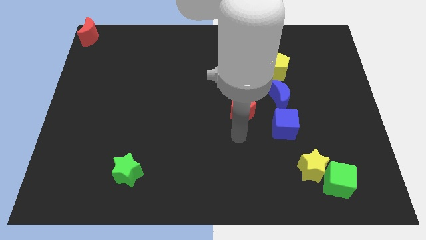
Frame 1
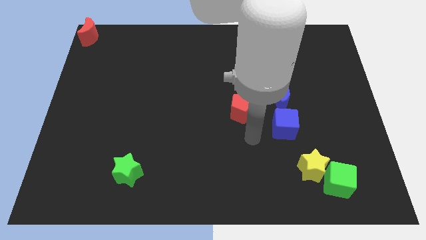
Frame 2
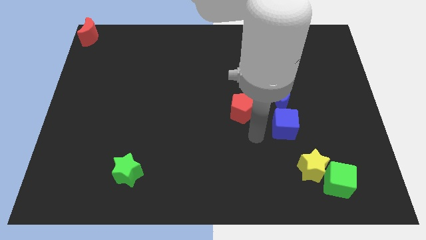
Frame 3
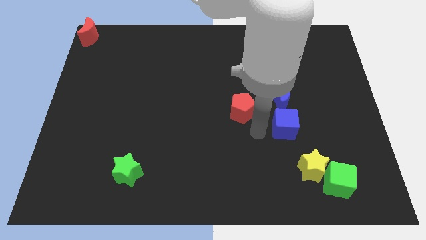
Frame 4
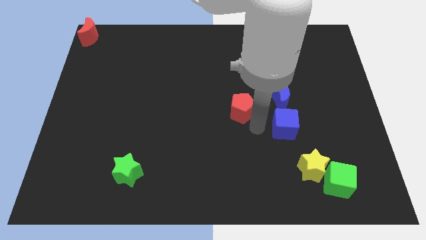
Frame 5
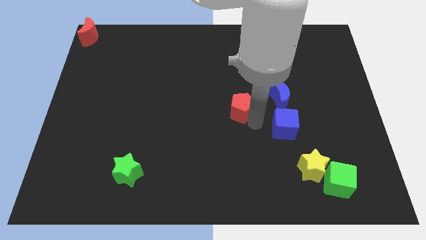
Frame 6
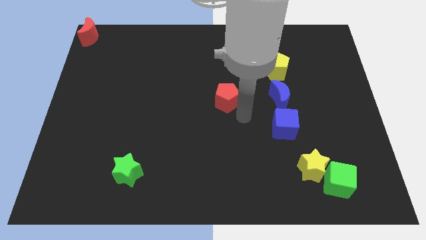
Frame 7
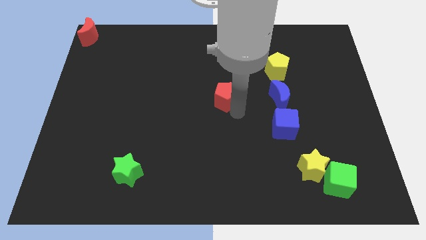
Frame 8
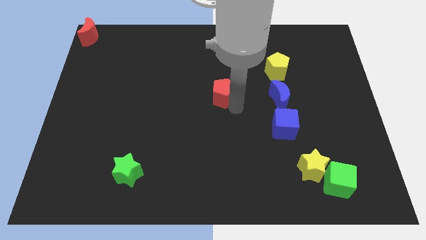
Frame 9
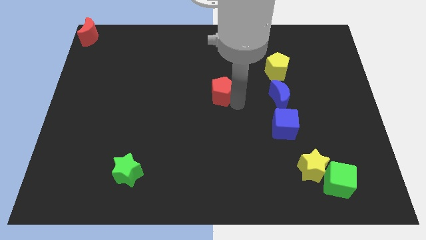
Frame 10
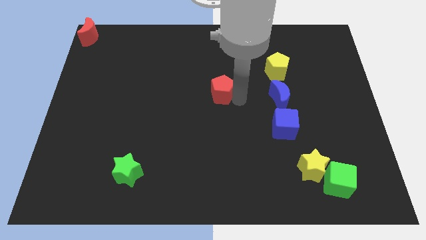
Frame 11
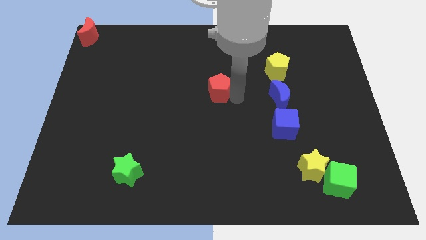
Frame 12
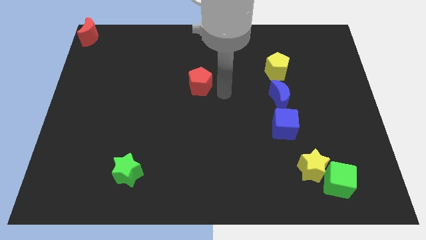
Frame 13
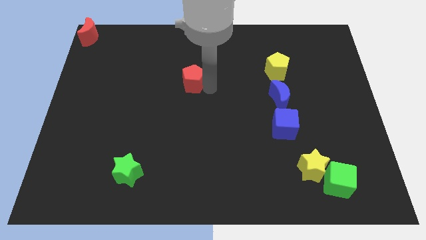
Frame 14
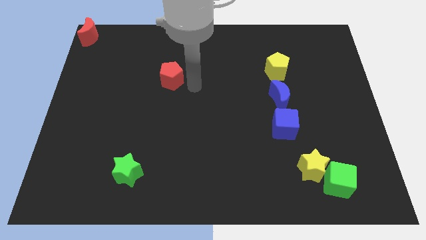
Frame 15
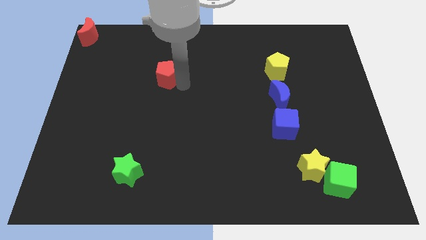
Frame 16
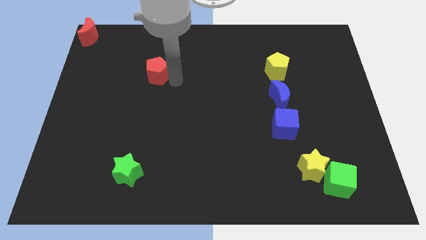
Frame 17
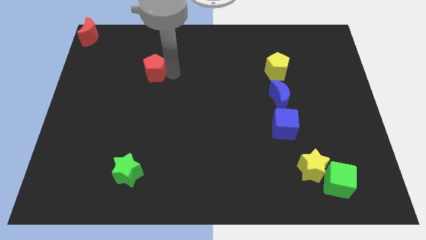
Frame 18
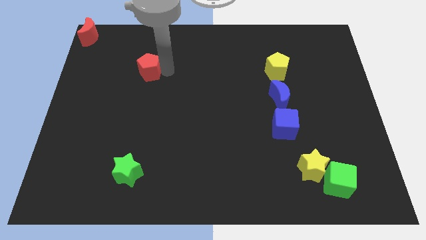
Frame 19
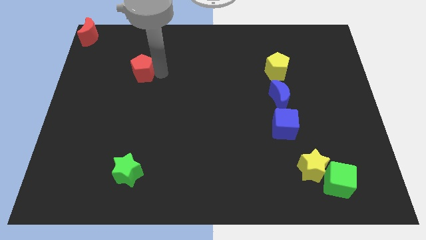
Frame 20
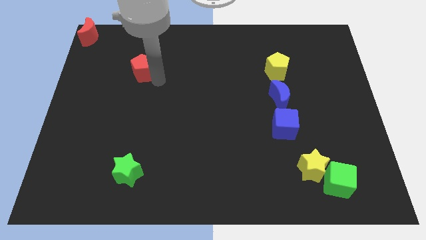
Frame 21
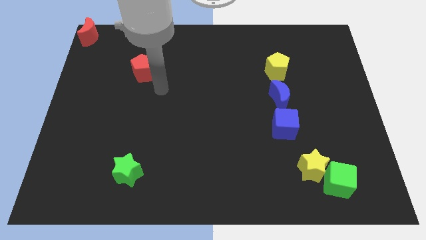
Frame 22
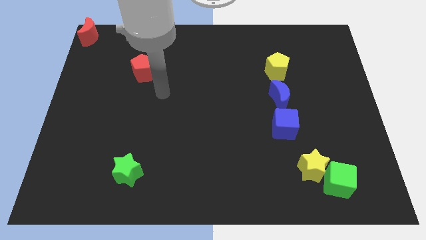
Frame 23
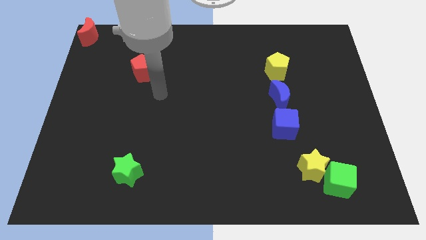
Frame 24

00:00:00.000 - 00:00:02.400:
place the red pentagon vertically above the green star

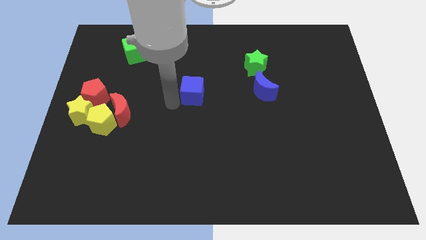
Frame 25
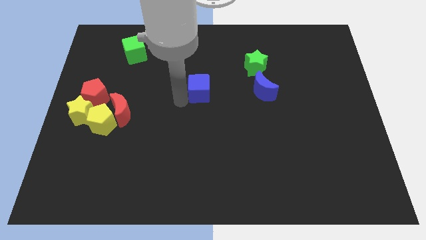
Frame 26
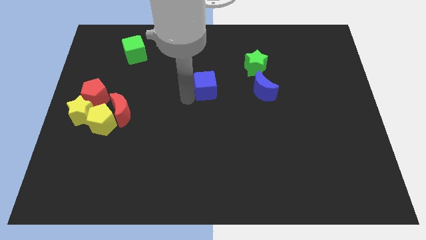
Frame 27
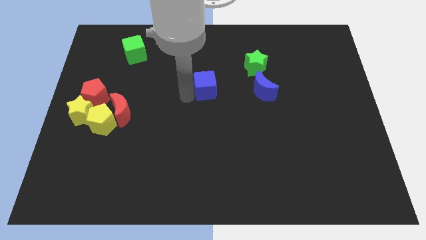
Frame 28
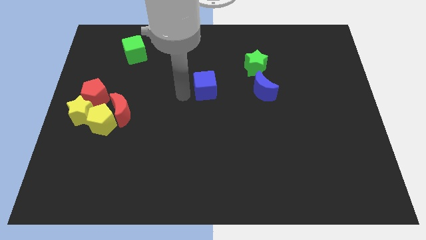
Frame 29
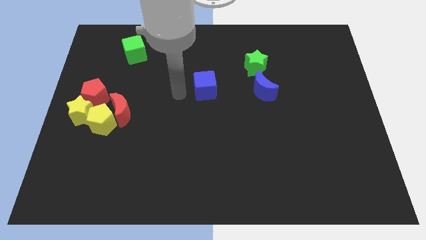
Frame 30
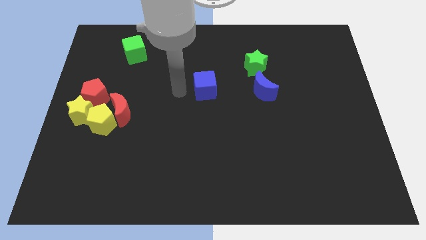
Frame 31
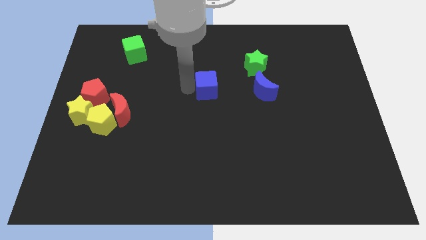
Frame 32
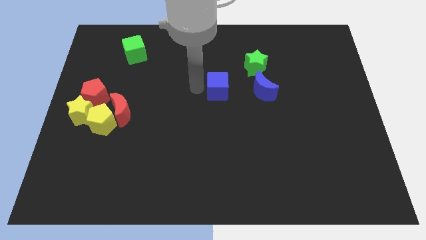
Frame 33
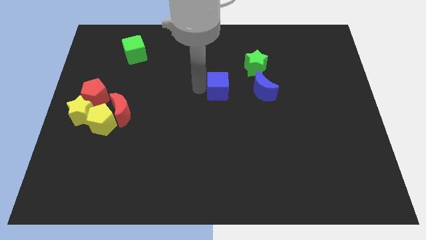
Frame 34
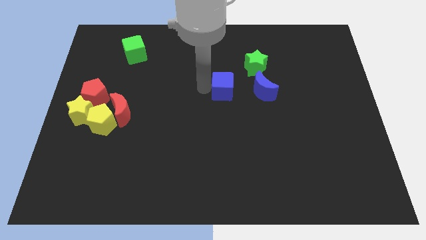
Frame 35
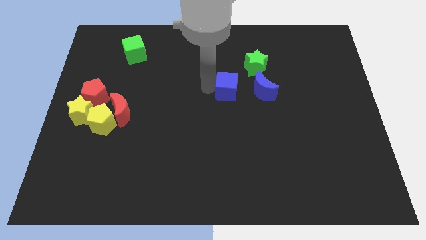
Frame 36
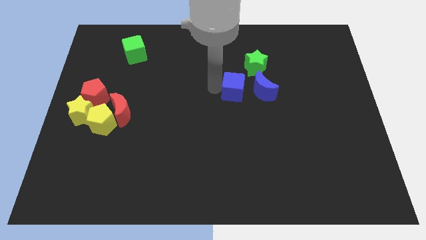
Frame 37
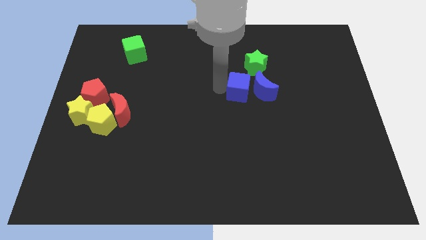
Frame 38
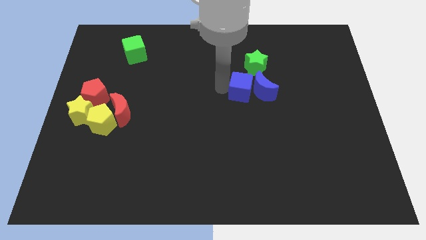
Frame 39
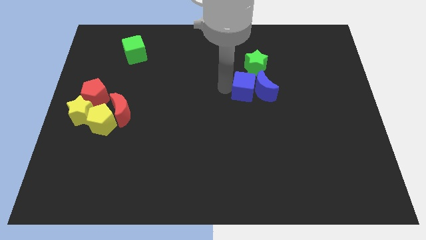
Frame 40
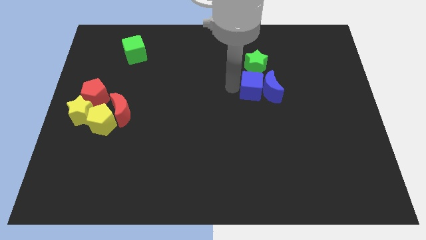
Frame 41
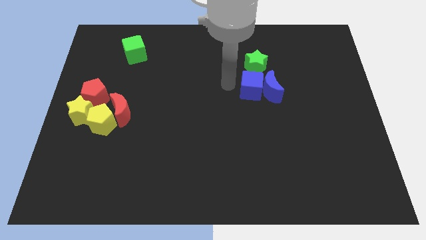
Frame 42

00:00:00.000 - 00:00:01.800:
place blue cube below green star

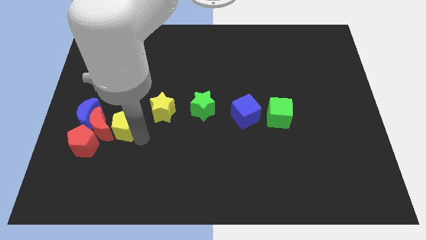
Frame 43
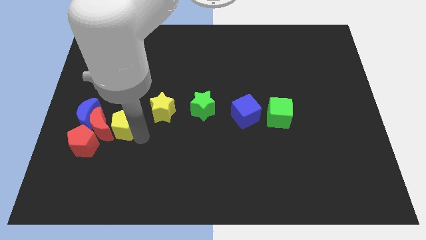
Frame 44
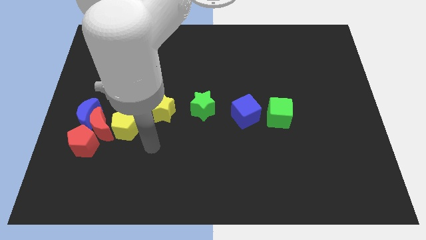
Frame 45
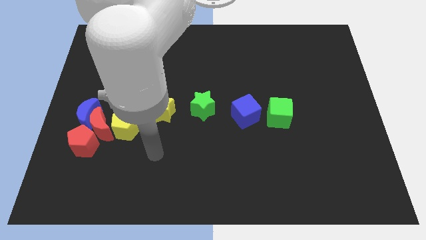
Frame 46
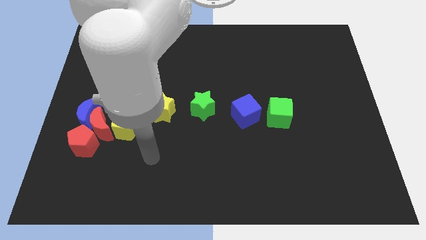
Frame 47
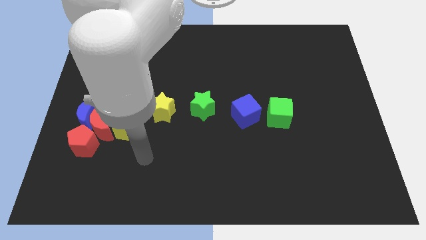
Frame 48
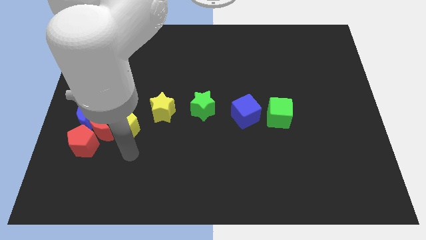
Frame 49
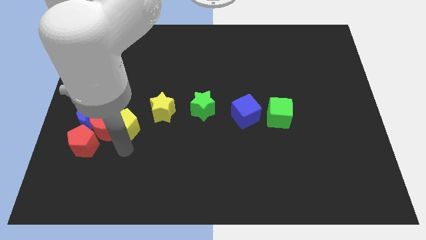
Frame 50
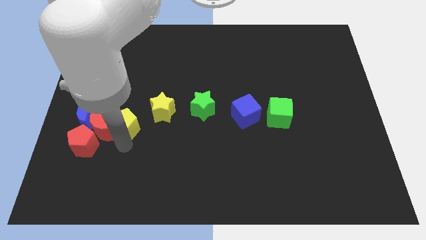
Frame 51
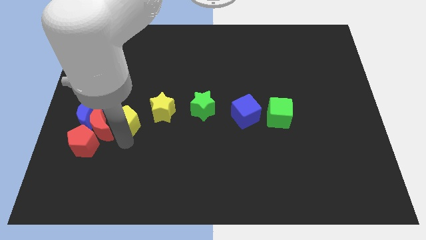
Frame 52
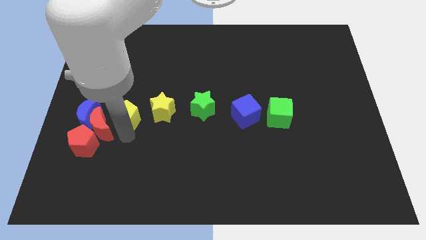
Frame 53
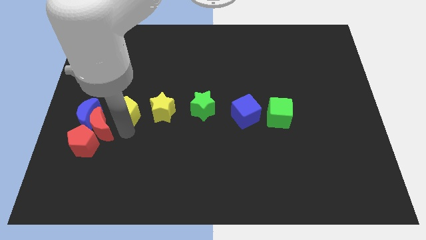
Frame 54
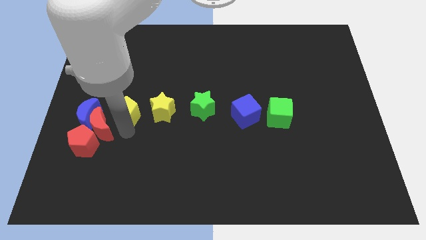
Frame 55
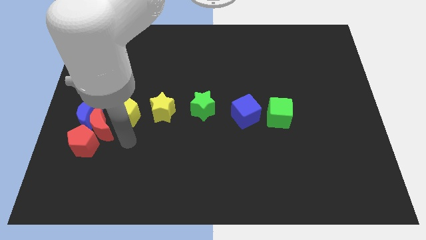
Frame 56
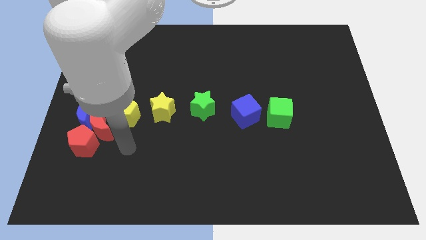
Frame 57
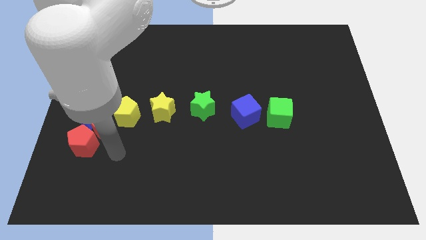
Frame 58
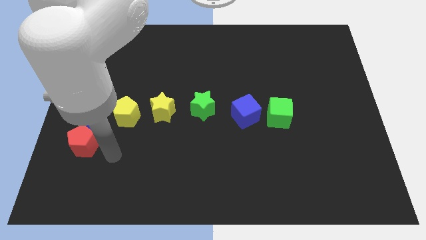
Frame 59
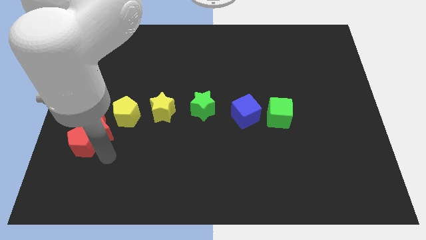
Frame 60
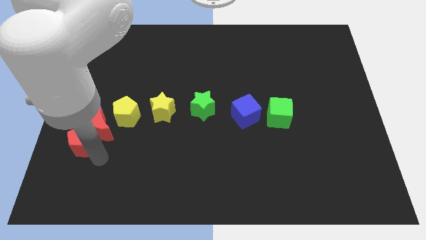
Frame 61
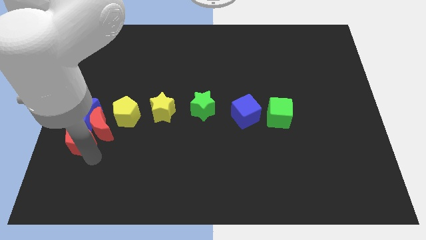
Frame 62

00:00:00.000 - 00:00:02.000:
move the yellow pentagon left beside the yellow star

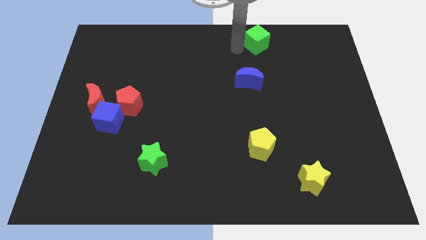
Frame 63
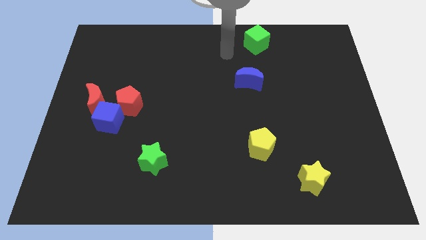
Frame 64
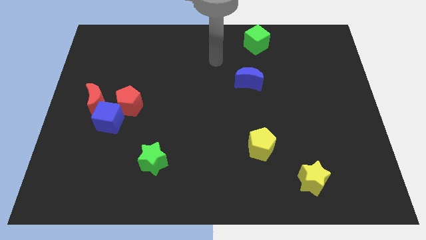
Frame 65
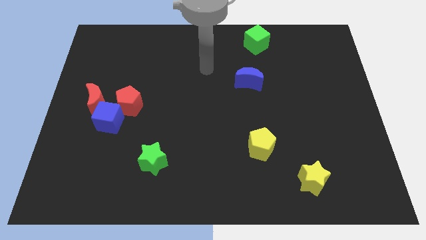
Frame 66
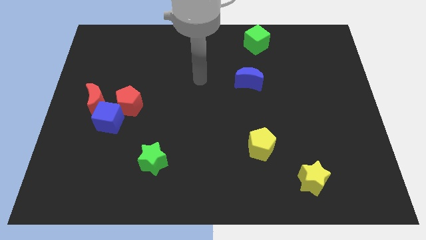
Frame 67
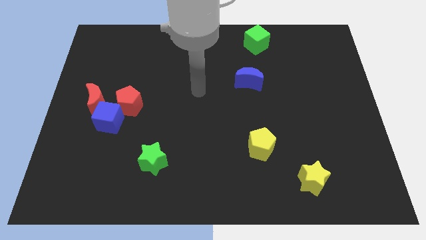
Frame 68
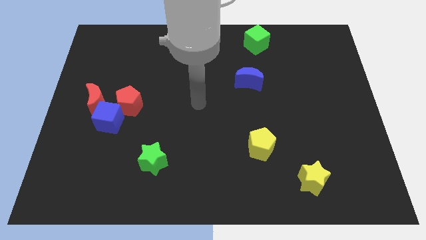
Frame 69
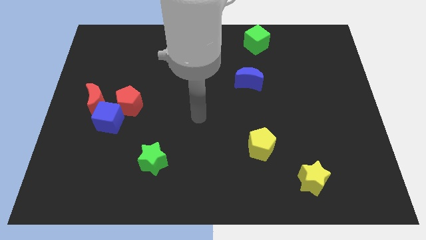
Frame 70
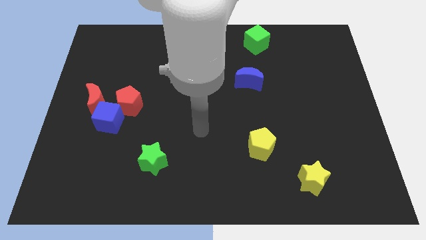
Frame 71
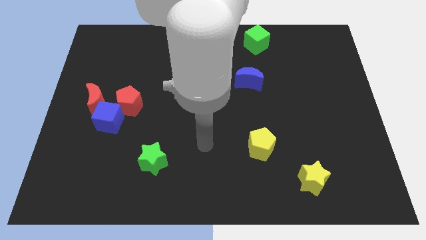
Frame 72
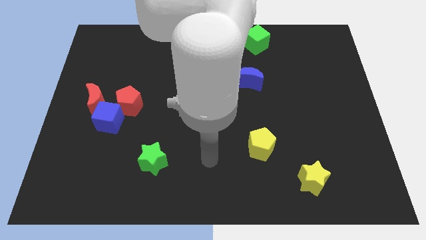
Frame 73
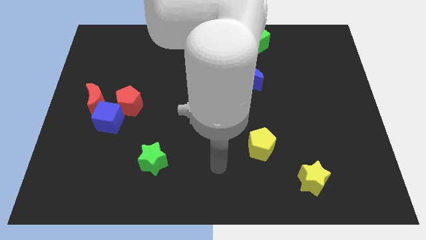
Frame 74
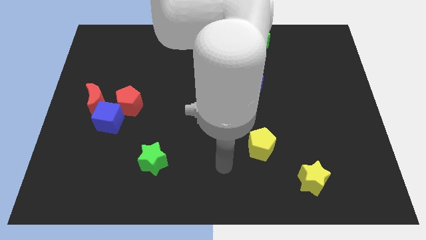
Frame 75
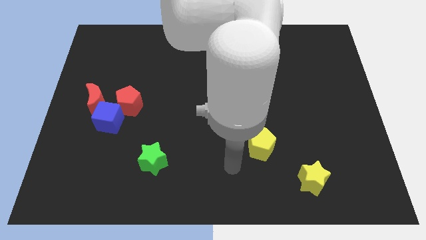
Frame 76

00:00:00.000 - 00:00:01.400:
move your arm away from green cube

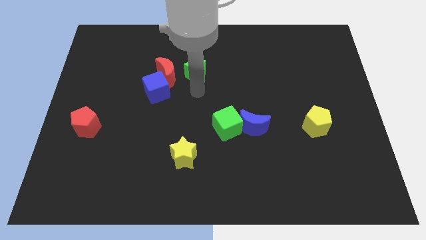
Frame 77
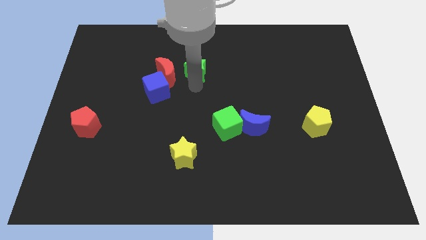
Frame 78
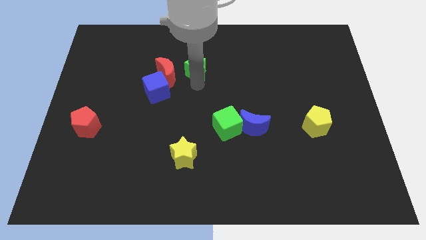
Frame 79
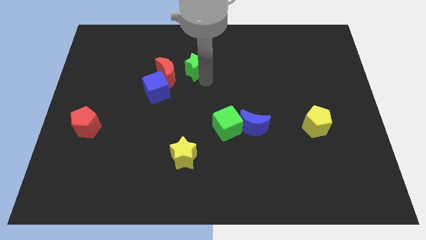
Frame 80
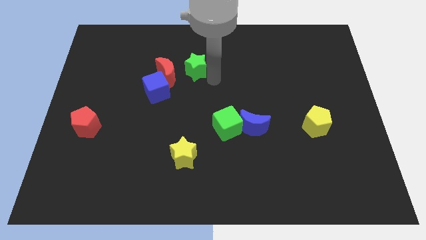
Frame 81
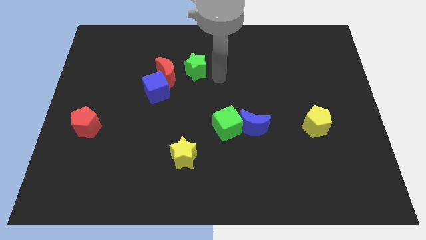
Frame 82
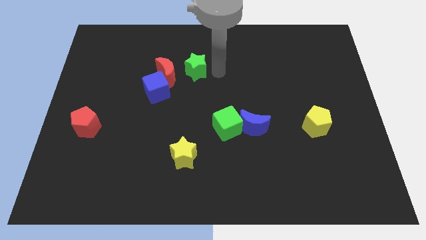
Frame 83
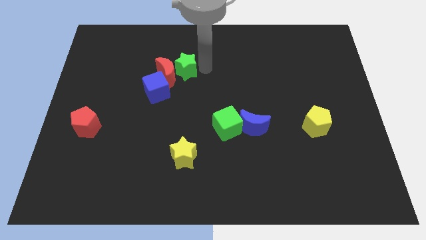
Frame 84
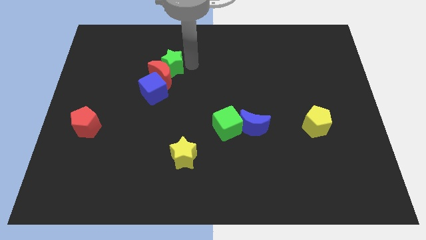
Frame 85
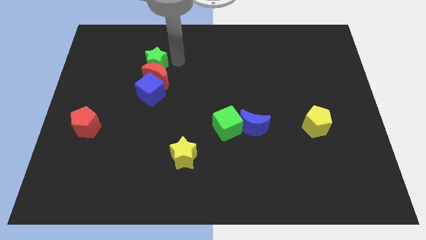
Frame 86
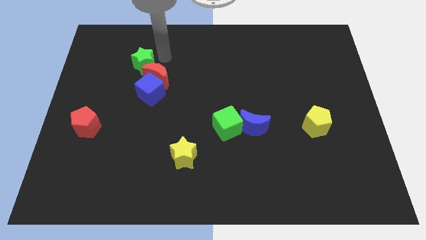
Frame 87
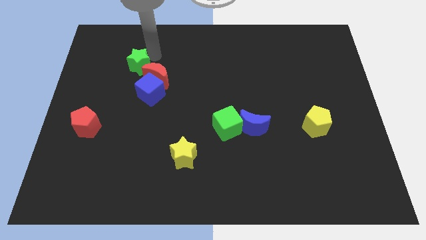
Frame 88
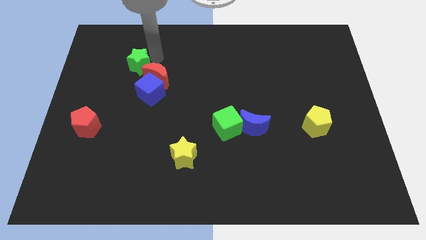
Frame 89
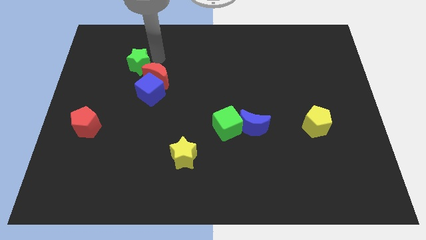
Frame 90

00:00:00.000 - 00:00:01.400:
move the green star at the top of the red moon

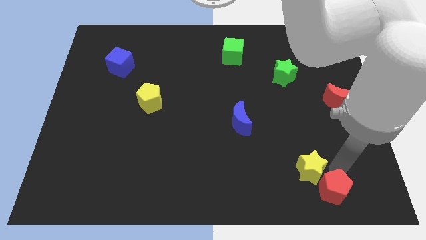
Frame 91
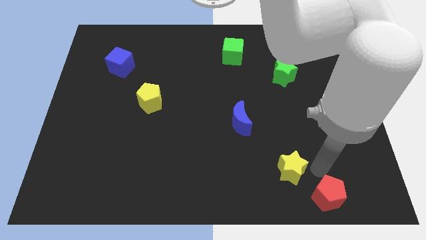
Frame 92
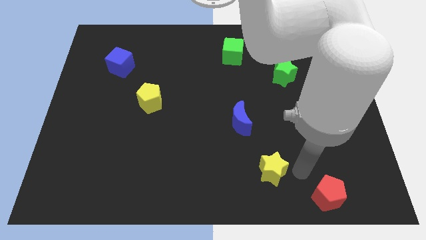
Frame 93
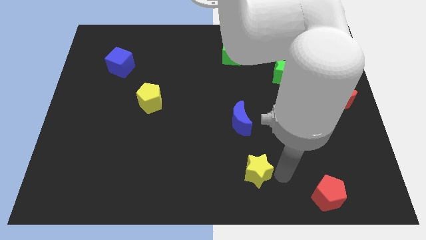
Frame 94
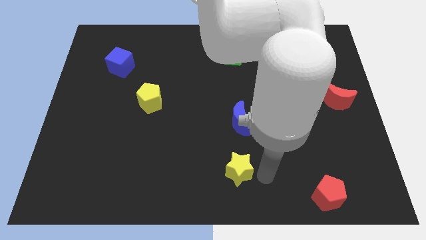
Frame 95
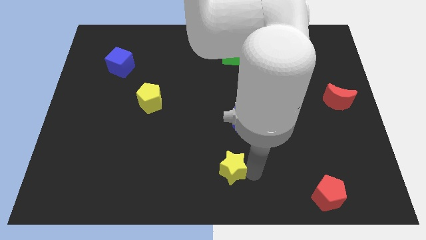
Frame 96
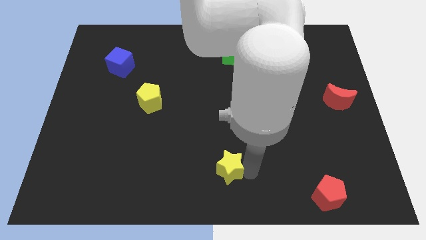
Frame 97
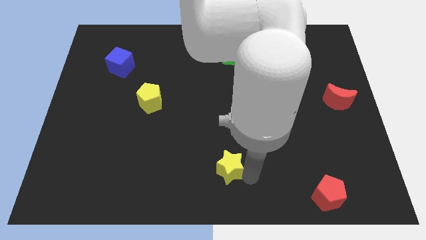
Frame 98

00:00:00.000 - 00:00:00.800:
move the yellow star slightly towards bottom center of the board
